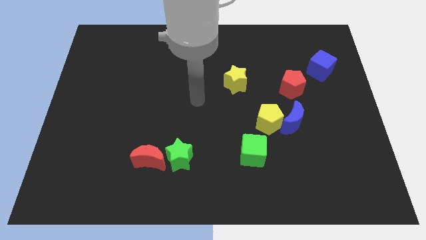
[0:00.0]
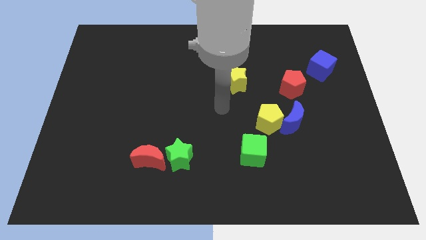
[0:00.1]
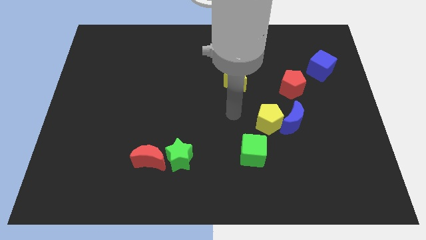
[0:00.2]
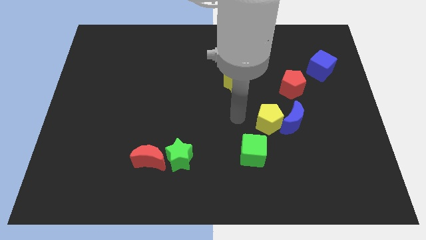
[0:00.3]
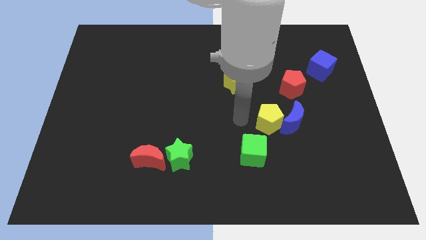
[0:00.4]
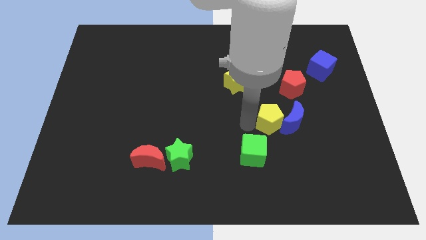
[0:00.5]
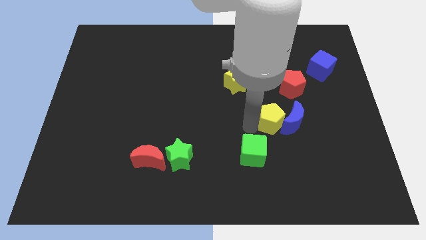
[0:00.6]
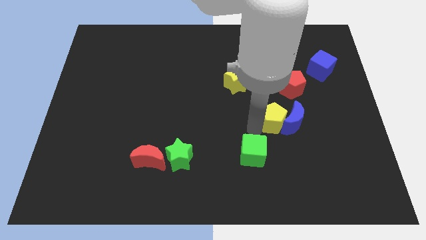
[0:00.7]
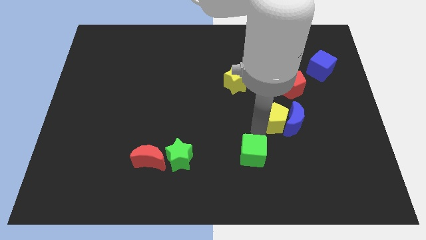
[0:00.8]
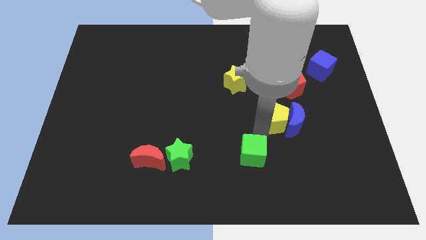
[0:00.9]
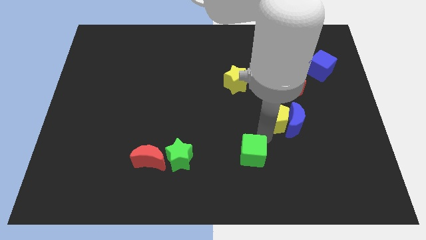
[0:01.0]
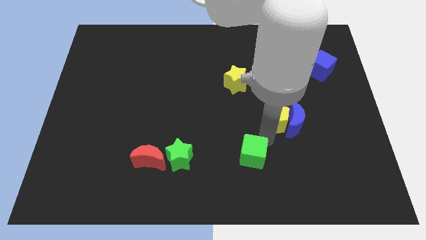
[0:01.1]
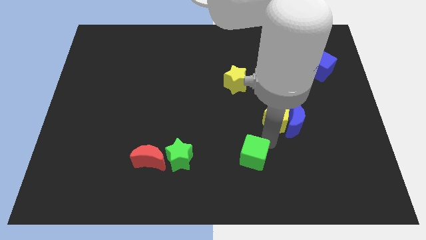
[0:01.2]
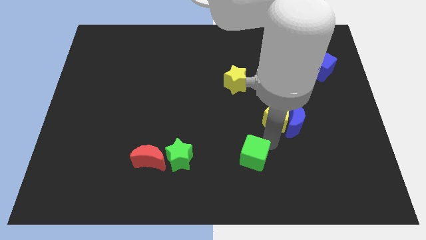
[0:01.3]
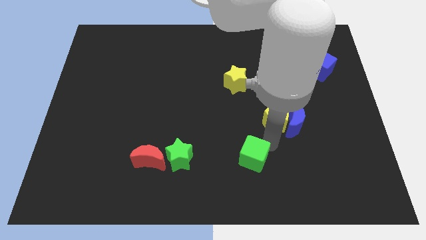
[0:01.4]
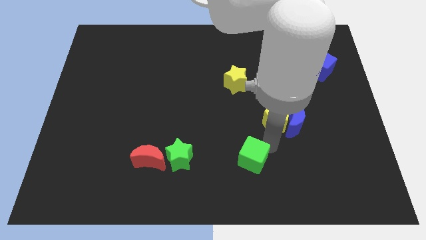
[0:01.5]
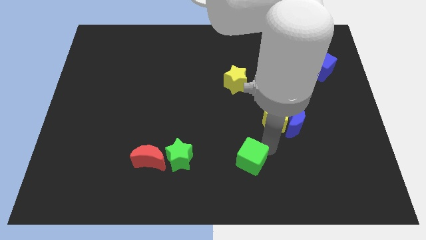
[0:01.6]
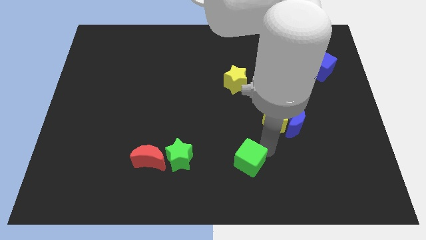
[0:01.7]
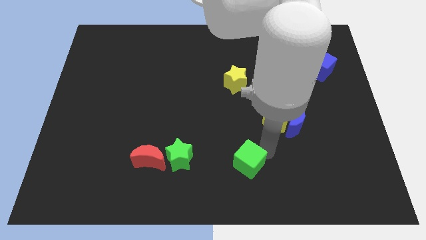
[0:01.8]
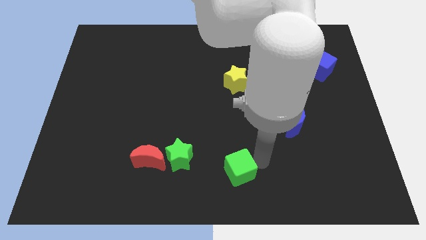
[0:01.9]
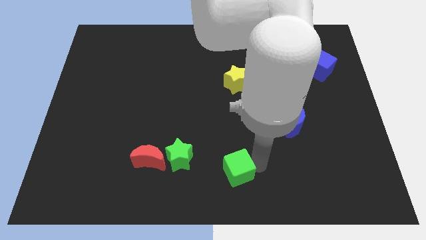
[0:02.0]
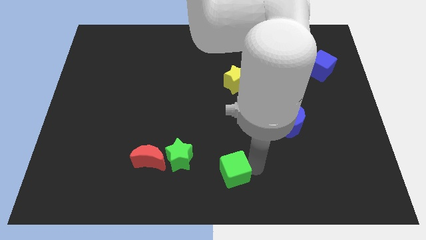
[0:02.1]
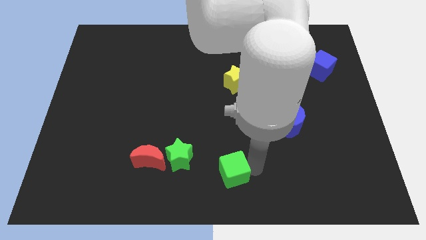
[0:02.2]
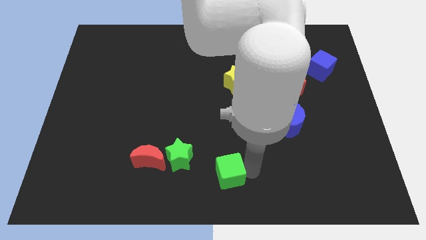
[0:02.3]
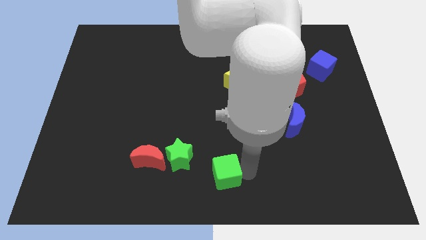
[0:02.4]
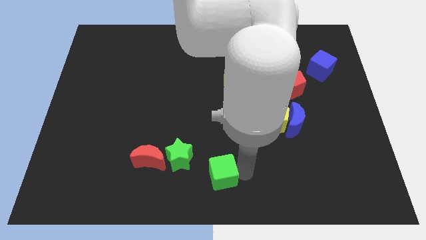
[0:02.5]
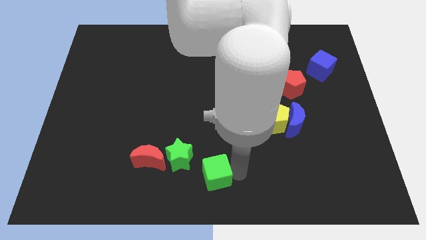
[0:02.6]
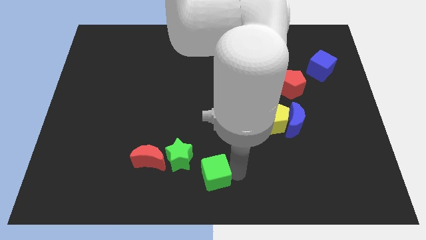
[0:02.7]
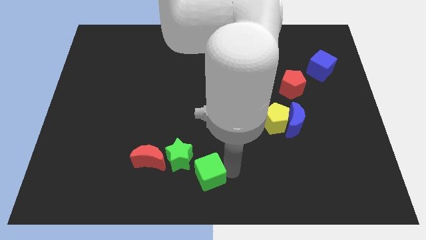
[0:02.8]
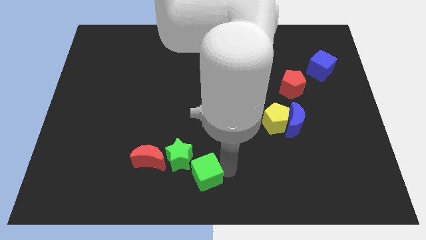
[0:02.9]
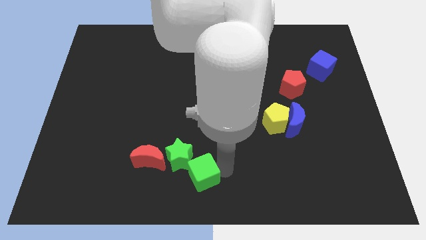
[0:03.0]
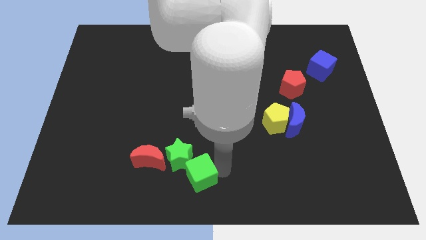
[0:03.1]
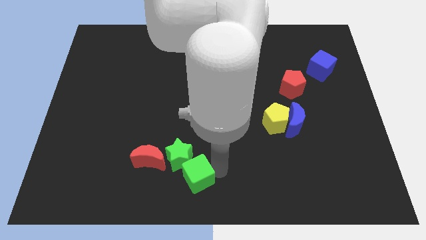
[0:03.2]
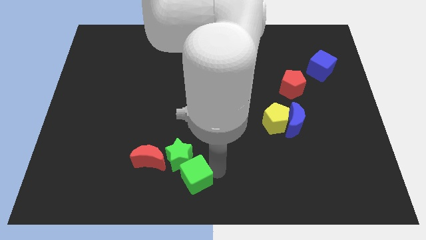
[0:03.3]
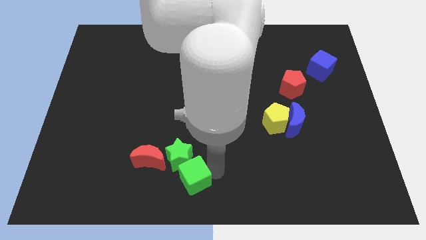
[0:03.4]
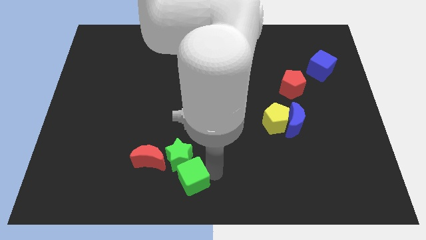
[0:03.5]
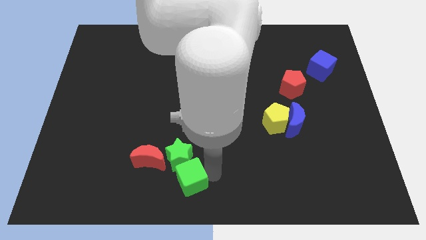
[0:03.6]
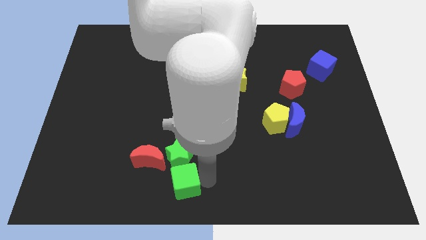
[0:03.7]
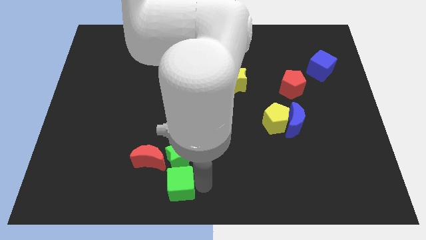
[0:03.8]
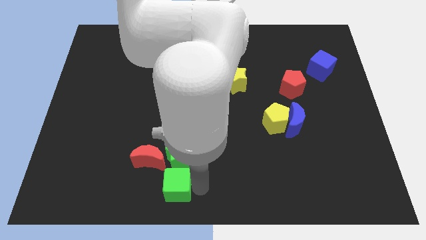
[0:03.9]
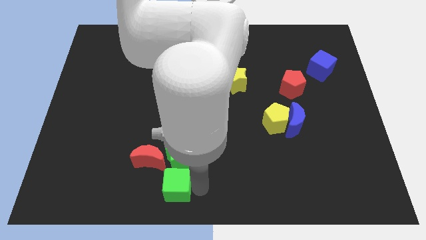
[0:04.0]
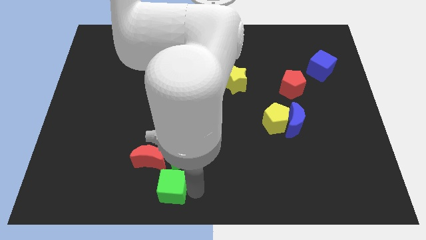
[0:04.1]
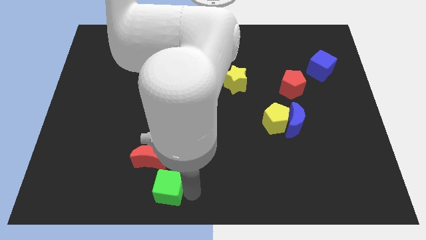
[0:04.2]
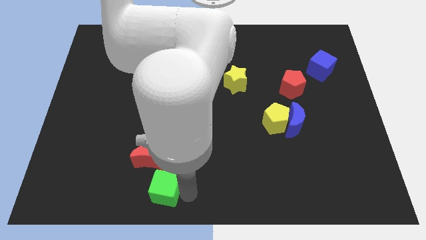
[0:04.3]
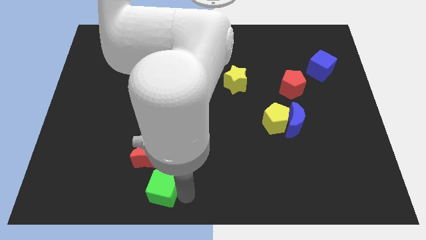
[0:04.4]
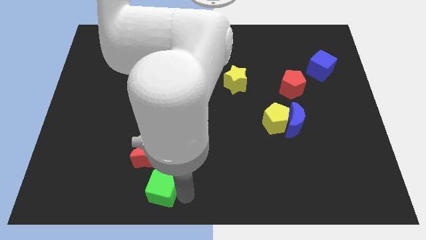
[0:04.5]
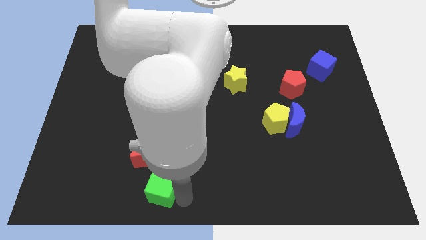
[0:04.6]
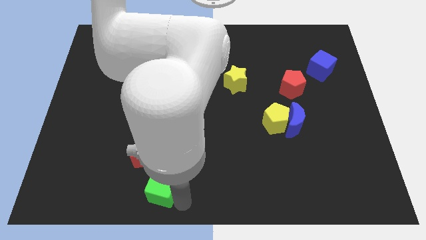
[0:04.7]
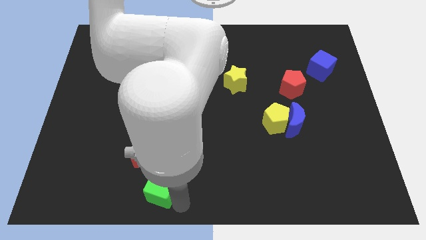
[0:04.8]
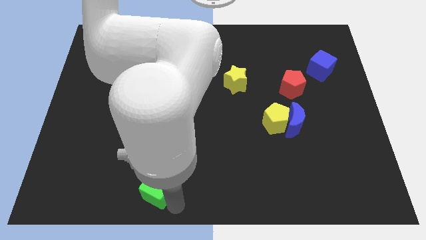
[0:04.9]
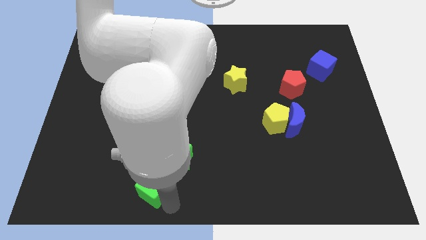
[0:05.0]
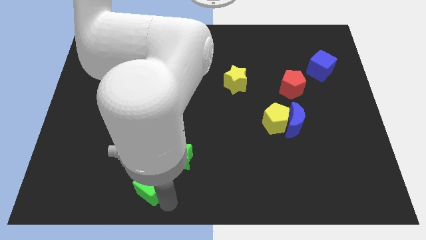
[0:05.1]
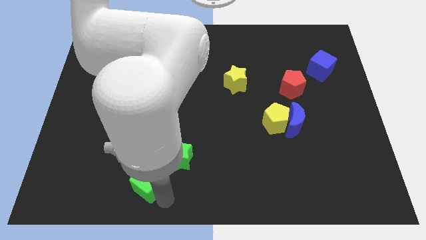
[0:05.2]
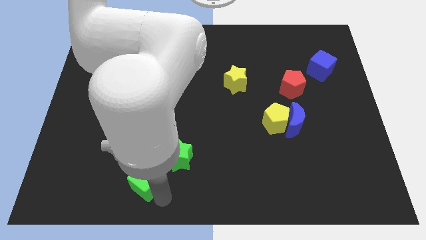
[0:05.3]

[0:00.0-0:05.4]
push the green cube close to the red moon

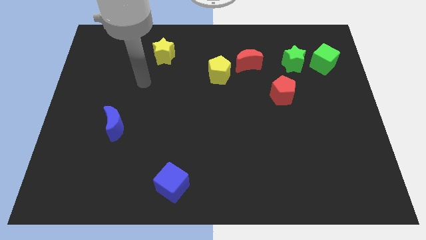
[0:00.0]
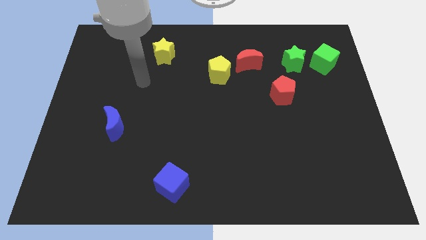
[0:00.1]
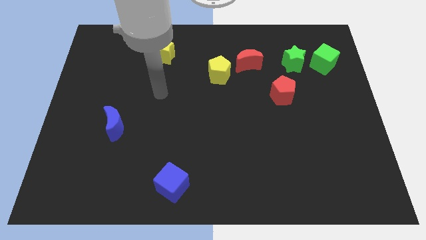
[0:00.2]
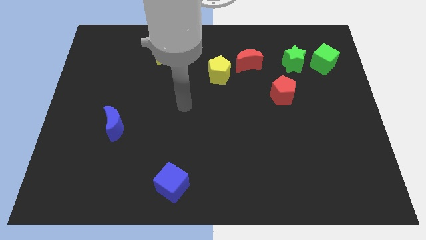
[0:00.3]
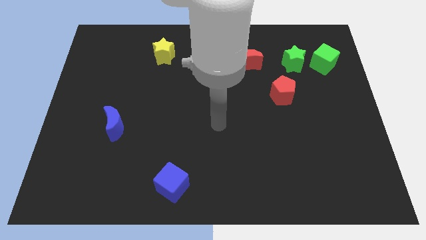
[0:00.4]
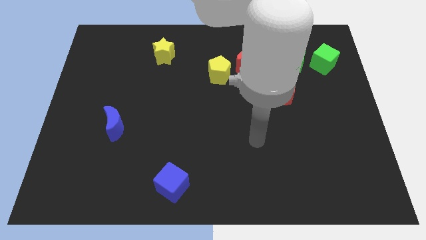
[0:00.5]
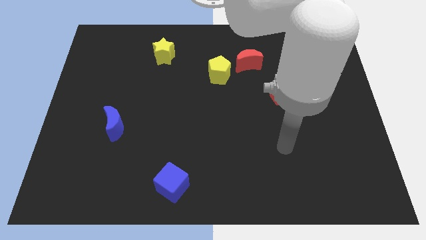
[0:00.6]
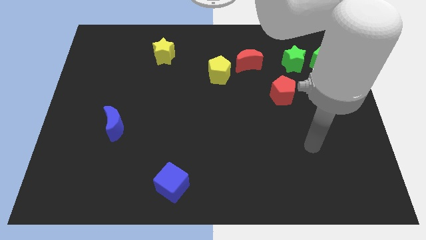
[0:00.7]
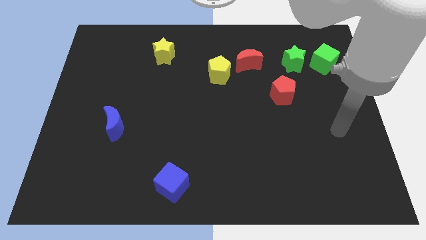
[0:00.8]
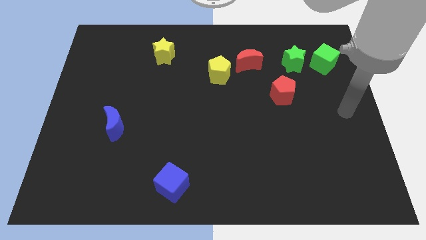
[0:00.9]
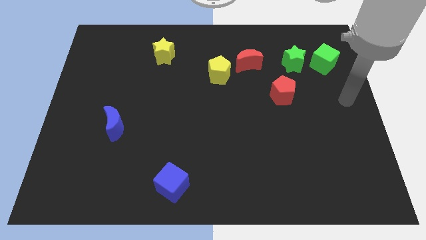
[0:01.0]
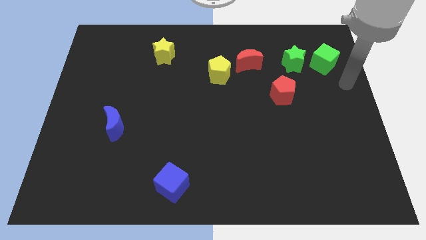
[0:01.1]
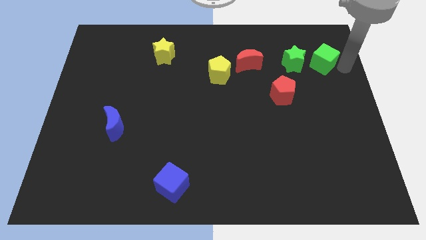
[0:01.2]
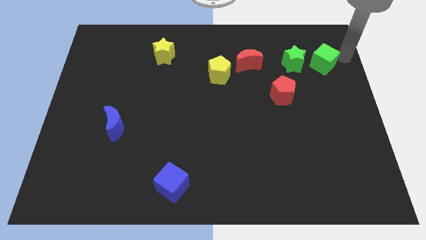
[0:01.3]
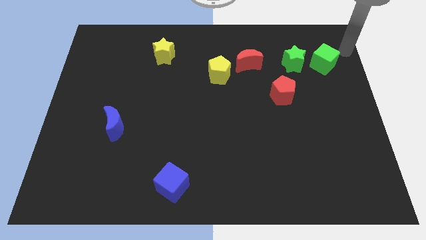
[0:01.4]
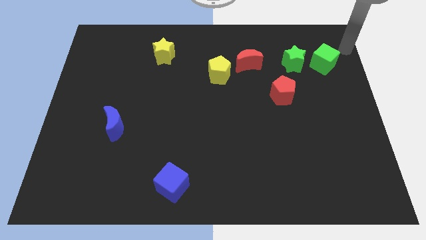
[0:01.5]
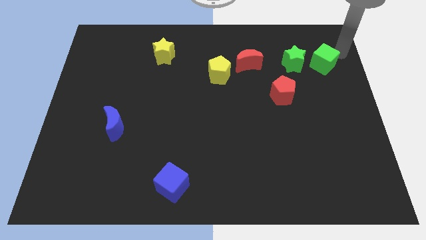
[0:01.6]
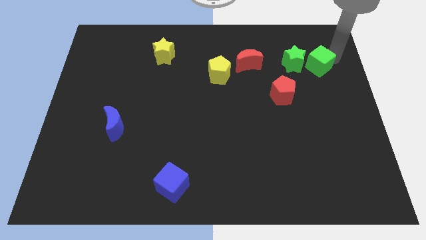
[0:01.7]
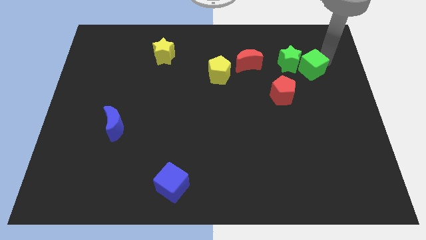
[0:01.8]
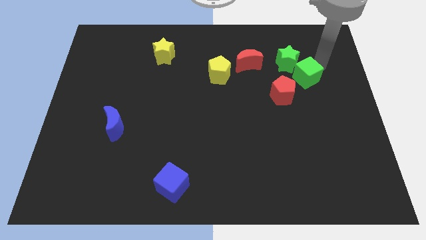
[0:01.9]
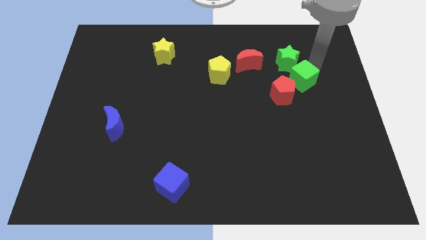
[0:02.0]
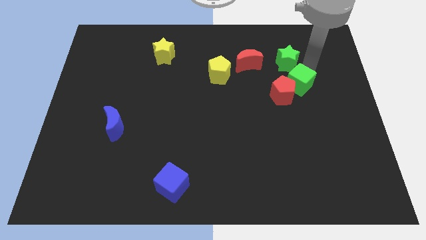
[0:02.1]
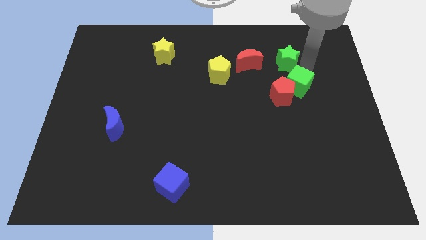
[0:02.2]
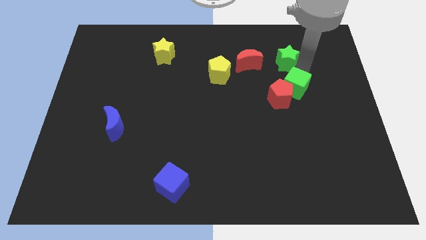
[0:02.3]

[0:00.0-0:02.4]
put the green cube to the red pentagon

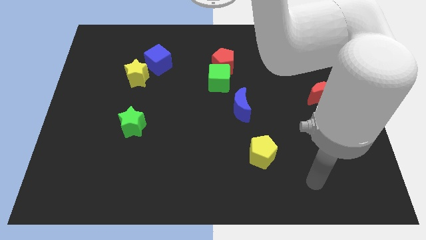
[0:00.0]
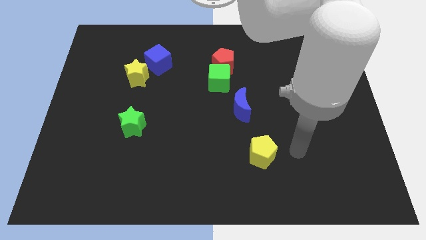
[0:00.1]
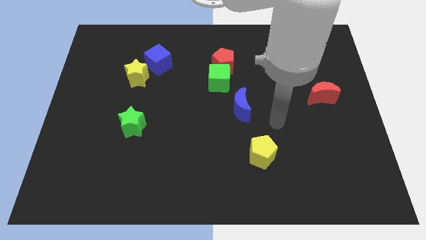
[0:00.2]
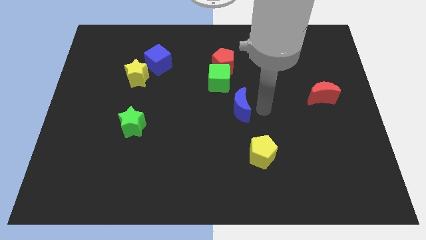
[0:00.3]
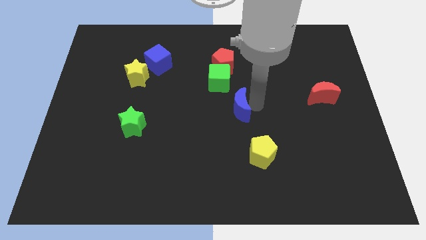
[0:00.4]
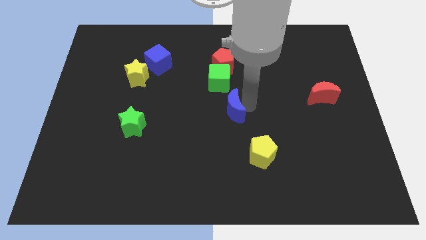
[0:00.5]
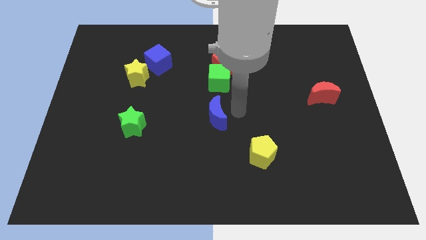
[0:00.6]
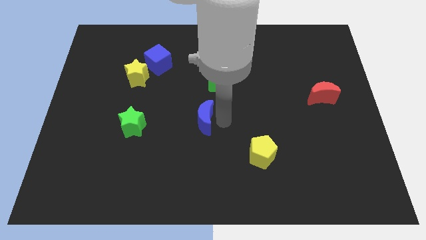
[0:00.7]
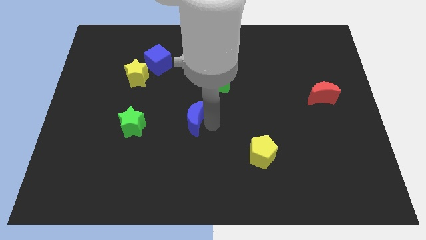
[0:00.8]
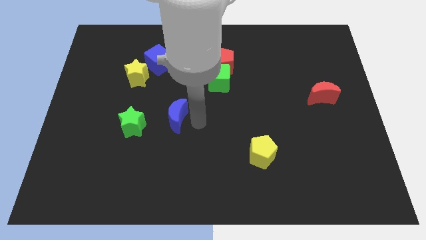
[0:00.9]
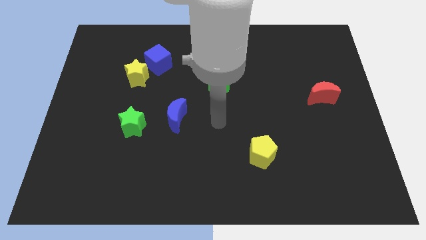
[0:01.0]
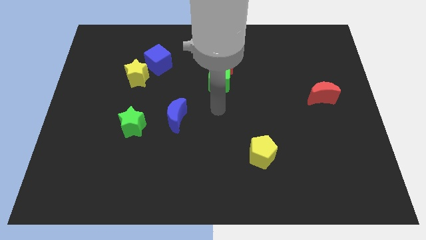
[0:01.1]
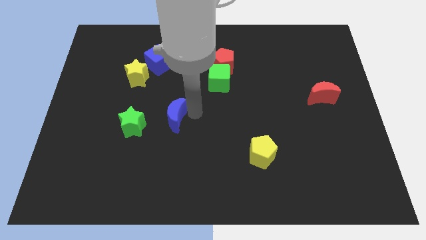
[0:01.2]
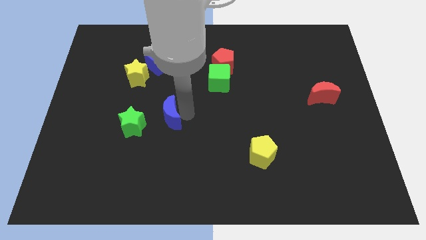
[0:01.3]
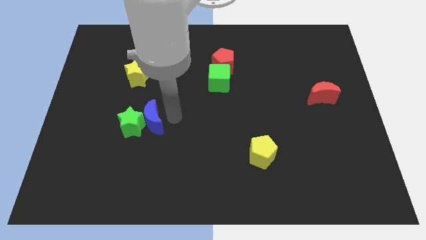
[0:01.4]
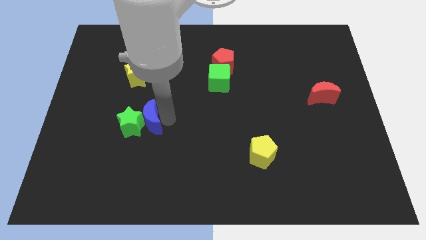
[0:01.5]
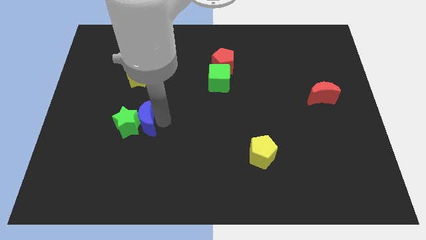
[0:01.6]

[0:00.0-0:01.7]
push the blue moon close to the green star
